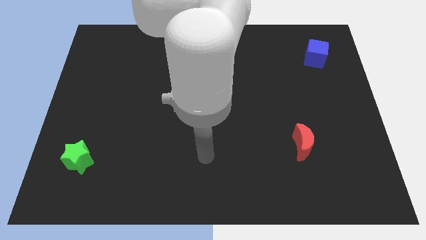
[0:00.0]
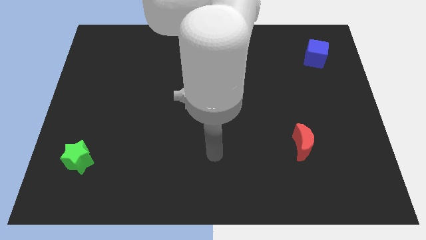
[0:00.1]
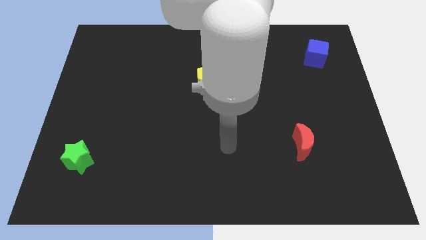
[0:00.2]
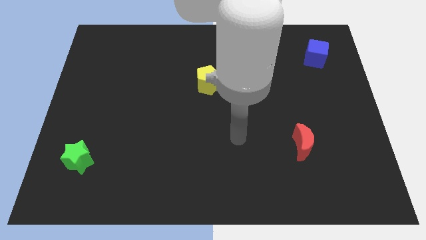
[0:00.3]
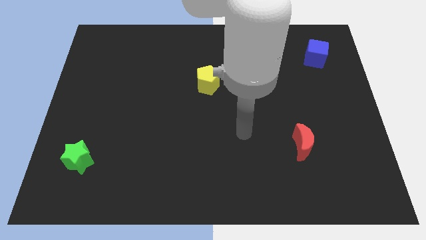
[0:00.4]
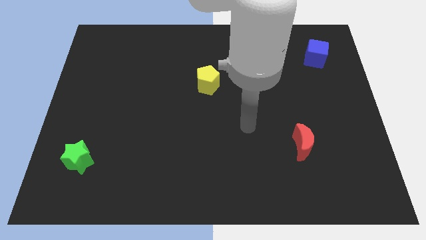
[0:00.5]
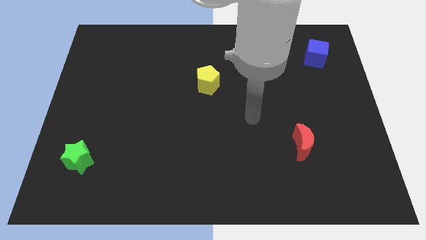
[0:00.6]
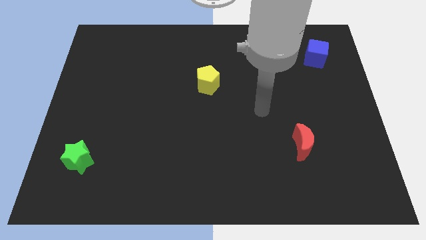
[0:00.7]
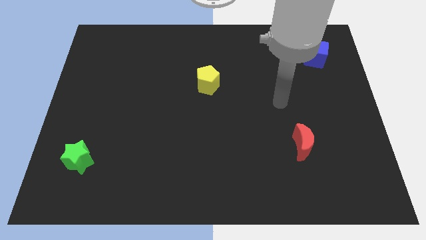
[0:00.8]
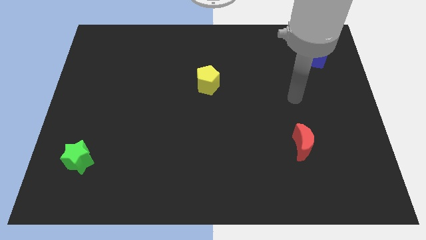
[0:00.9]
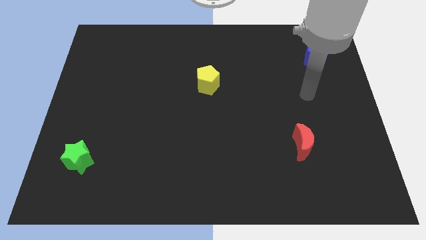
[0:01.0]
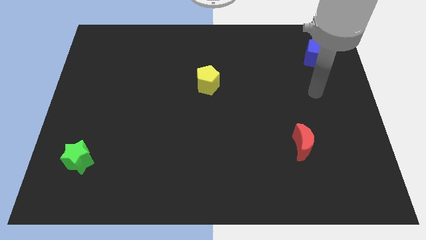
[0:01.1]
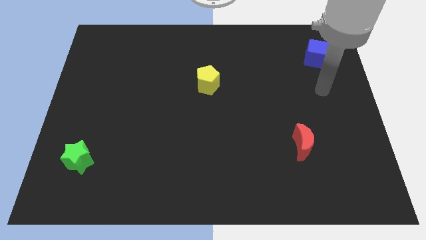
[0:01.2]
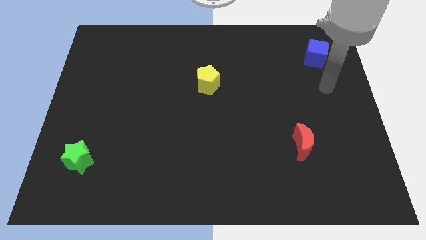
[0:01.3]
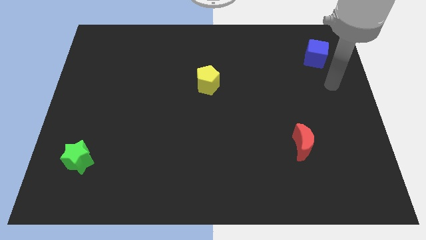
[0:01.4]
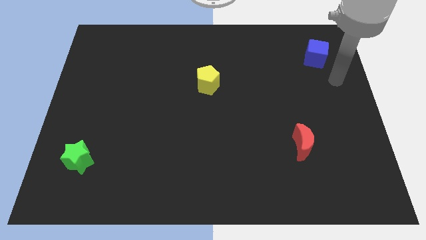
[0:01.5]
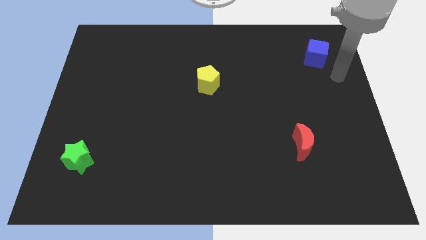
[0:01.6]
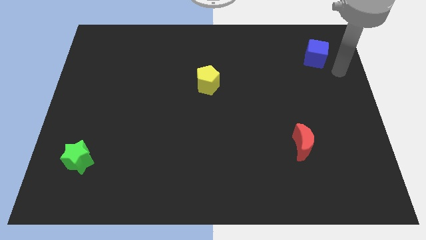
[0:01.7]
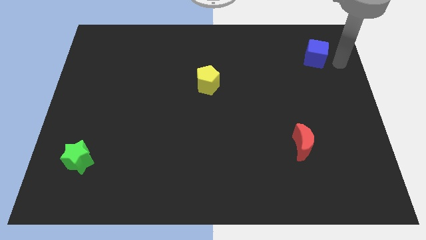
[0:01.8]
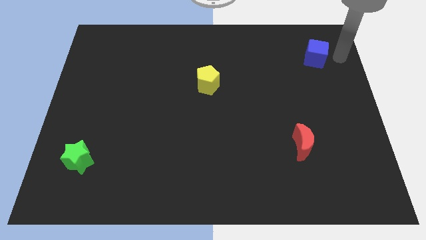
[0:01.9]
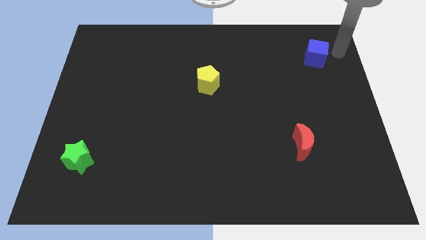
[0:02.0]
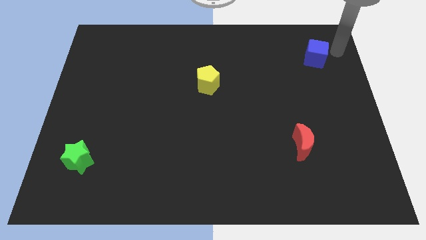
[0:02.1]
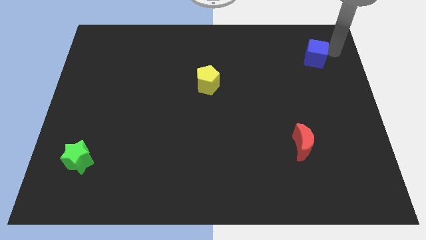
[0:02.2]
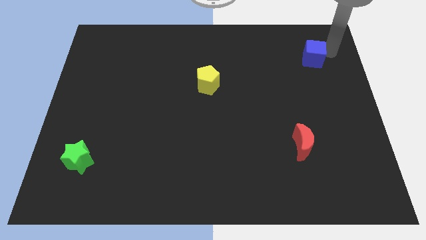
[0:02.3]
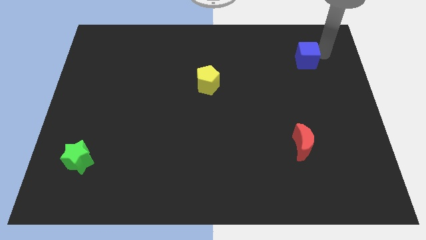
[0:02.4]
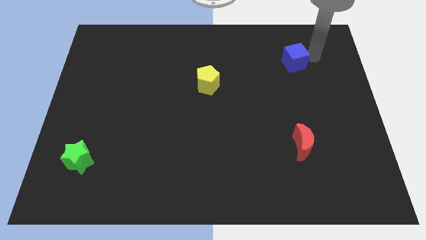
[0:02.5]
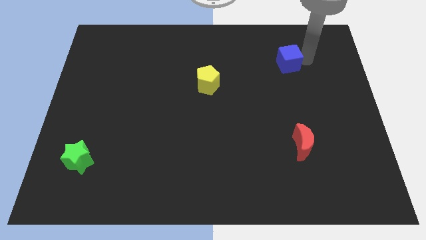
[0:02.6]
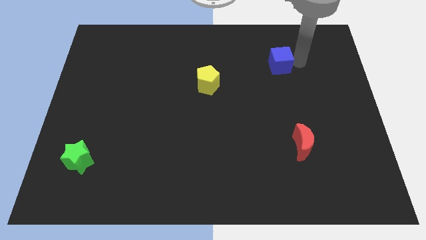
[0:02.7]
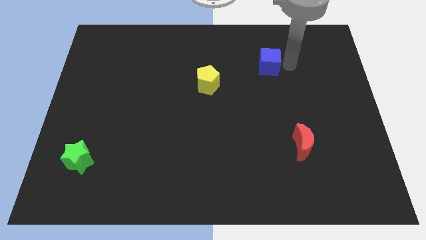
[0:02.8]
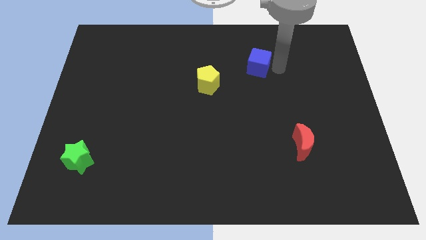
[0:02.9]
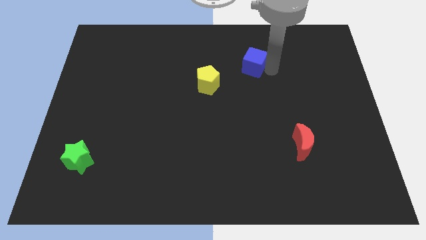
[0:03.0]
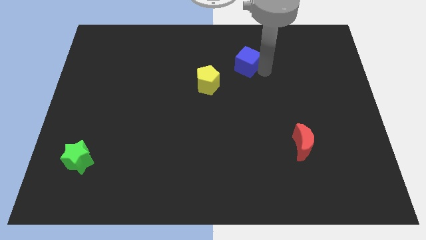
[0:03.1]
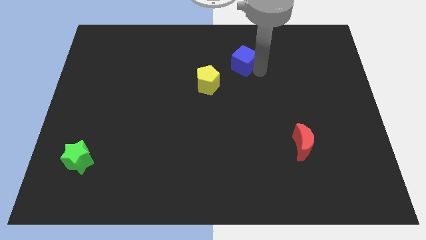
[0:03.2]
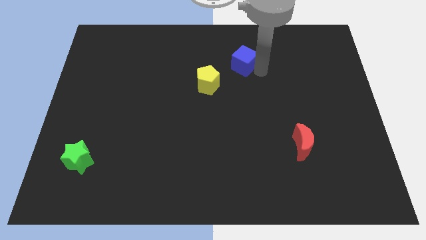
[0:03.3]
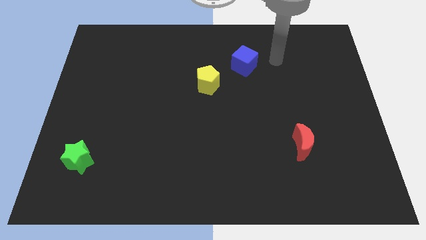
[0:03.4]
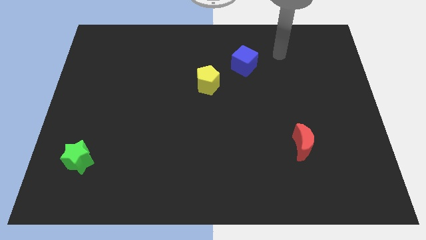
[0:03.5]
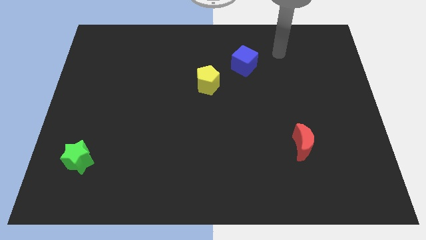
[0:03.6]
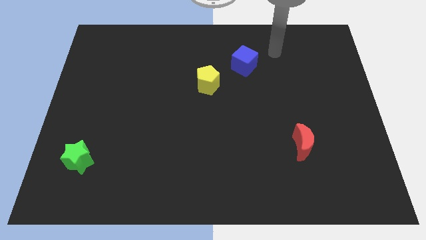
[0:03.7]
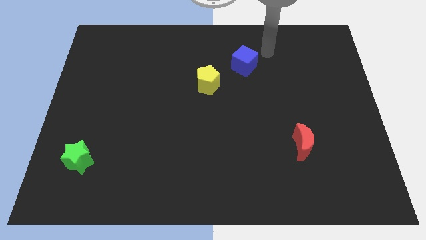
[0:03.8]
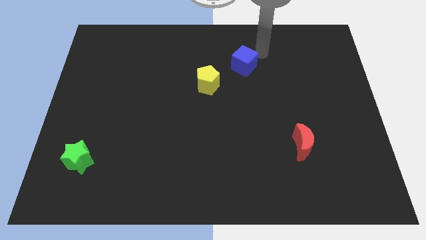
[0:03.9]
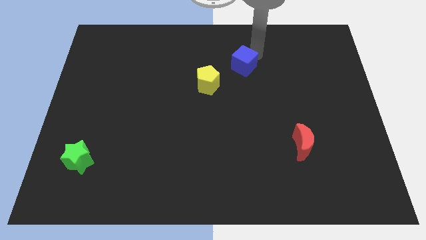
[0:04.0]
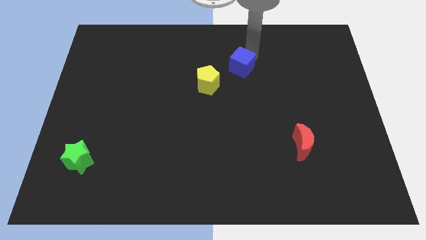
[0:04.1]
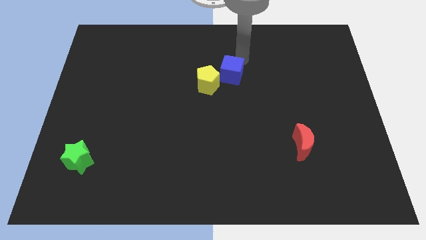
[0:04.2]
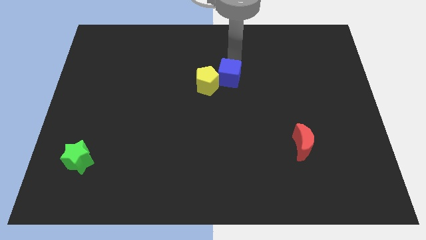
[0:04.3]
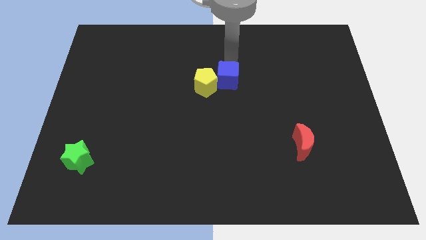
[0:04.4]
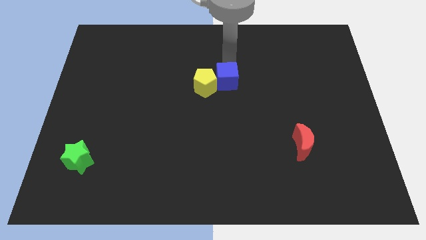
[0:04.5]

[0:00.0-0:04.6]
move the blue block close to the yellow block

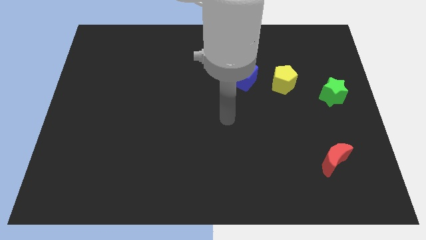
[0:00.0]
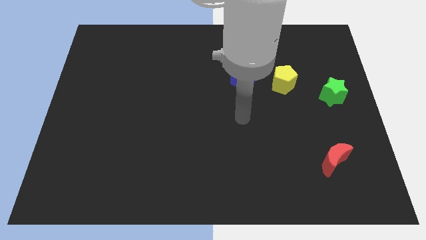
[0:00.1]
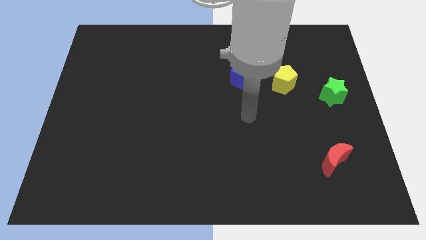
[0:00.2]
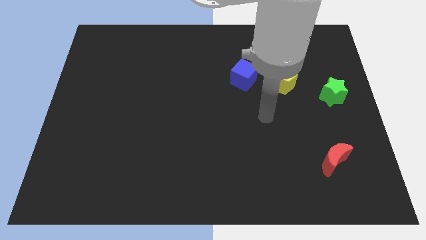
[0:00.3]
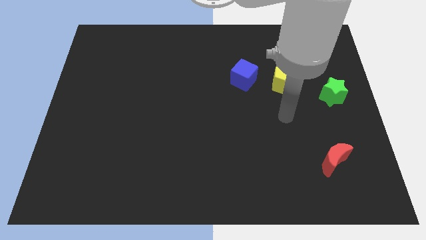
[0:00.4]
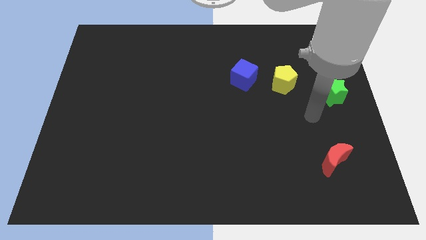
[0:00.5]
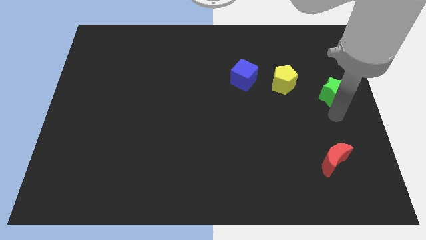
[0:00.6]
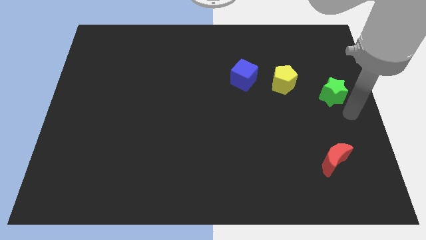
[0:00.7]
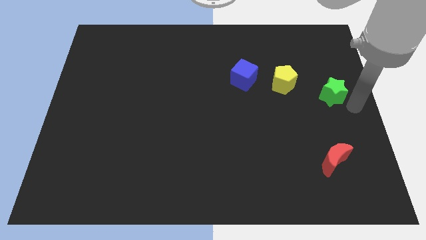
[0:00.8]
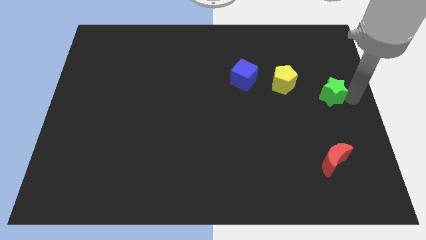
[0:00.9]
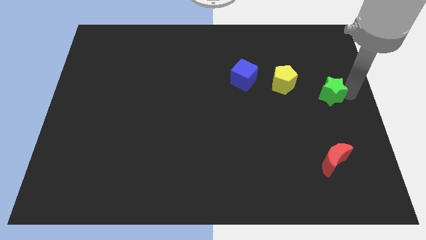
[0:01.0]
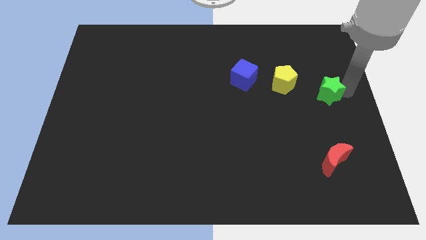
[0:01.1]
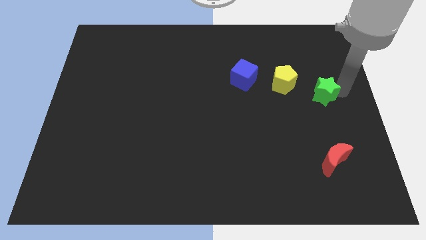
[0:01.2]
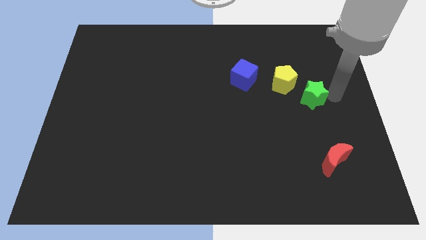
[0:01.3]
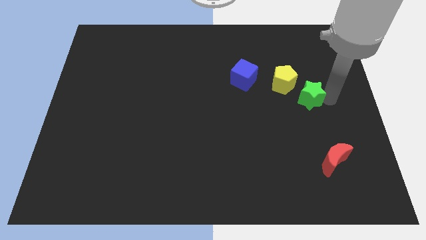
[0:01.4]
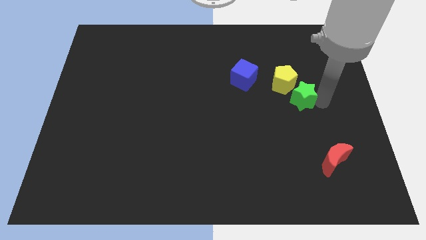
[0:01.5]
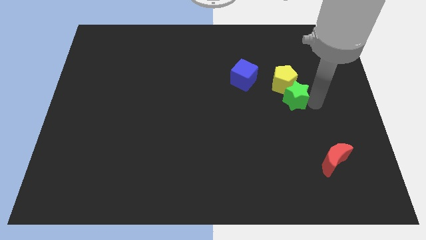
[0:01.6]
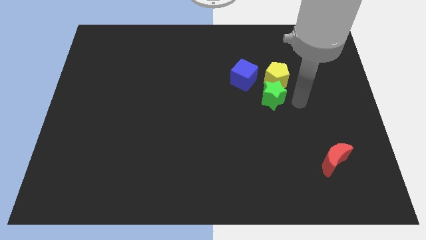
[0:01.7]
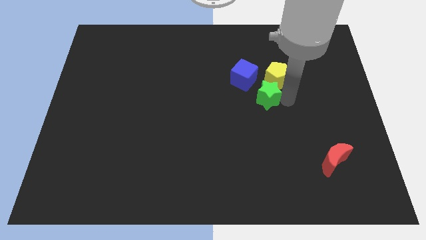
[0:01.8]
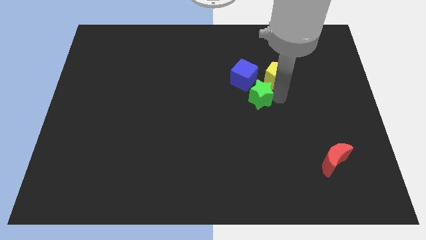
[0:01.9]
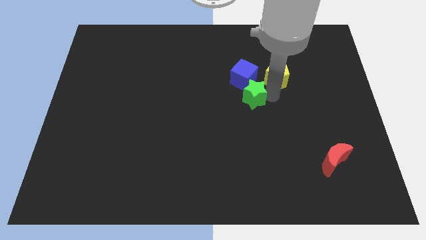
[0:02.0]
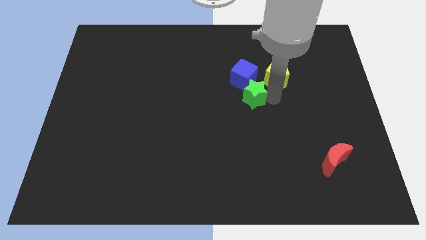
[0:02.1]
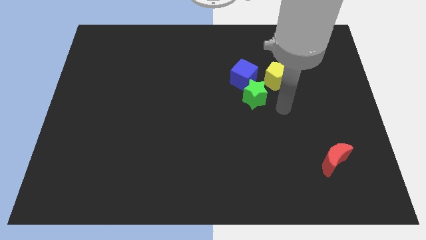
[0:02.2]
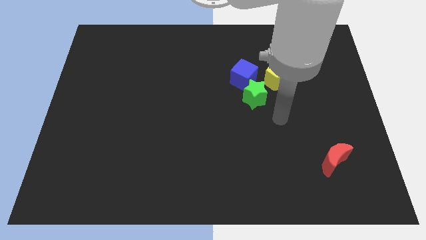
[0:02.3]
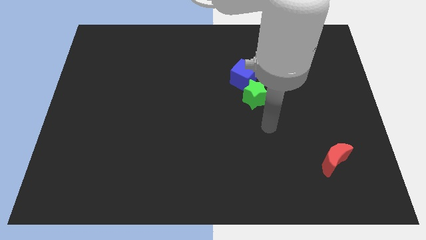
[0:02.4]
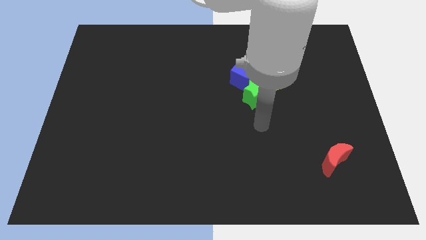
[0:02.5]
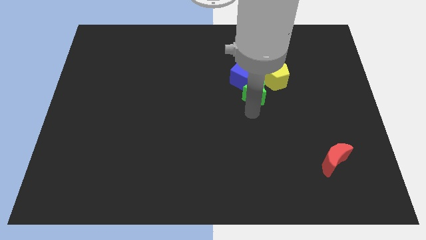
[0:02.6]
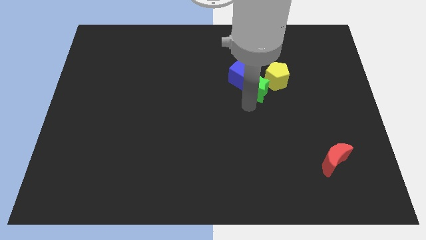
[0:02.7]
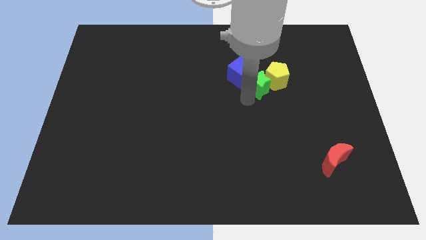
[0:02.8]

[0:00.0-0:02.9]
slide the star close to the blue block

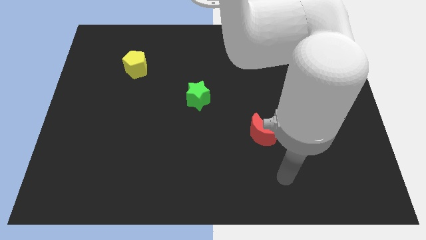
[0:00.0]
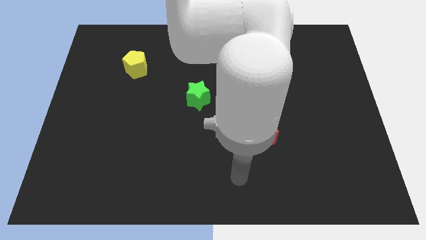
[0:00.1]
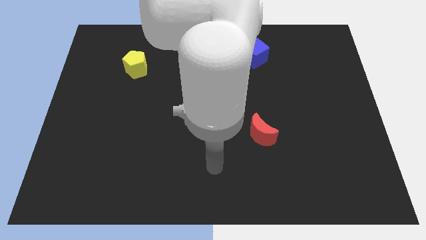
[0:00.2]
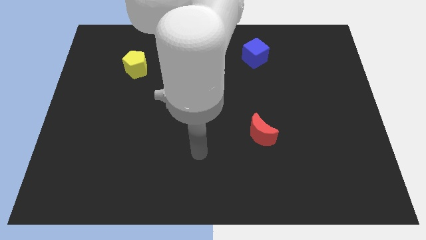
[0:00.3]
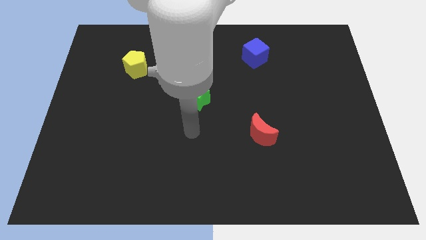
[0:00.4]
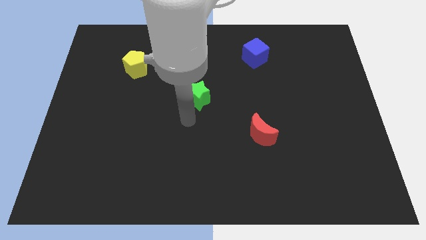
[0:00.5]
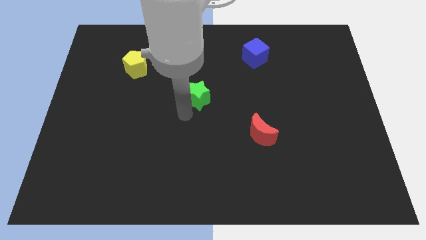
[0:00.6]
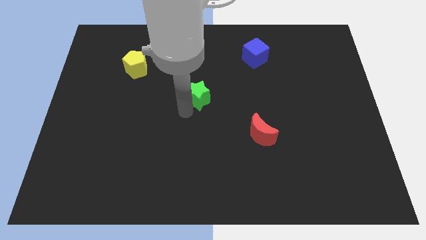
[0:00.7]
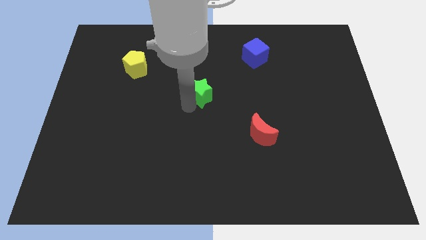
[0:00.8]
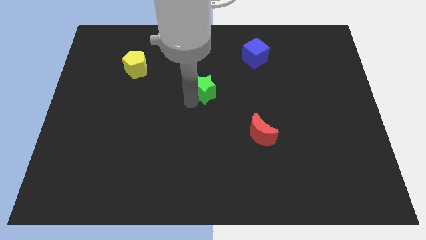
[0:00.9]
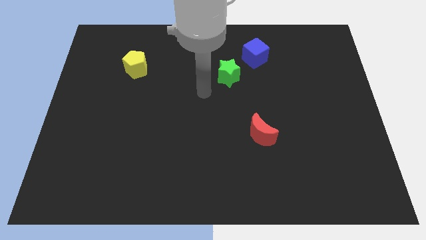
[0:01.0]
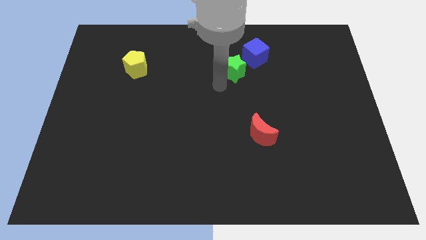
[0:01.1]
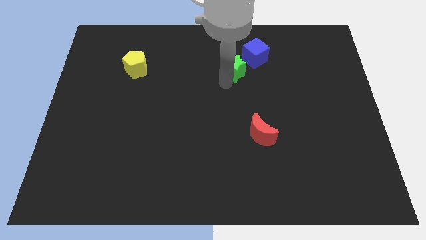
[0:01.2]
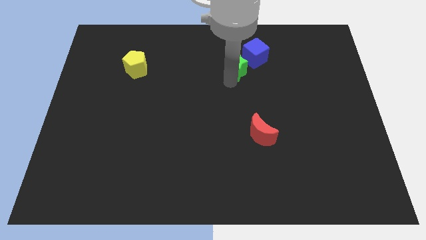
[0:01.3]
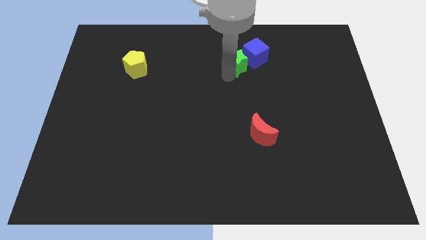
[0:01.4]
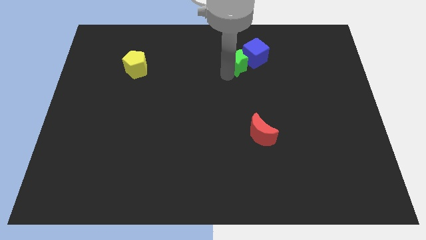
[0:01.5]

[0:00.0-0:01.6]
slide the green block to the blue cube
